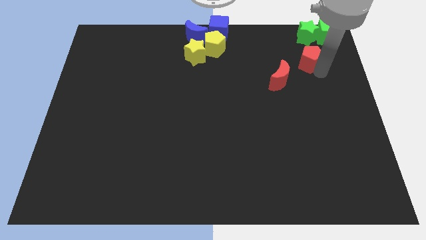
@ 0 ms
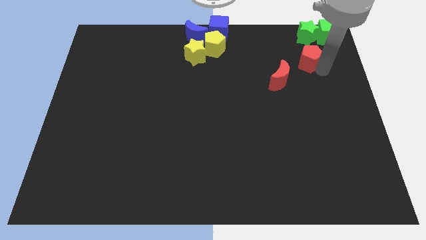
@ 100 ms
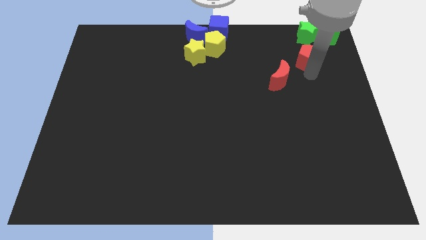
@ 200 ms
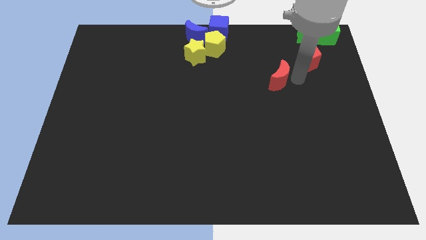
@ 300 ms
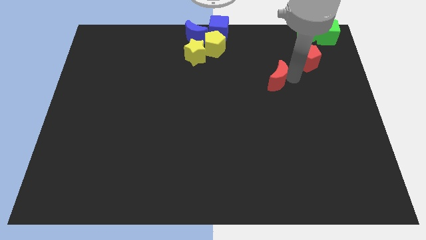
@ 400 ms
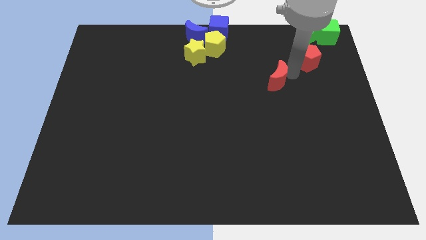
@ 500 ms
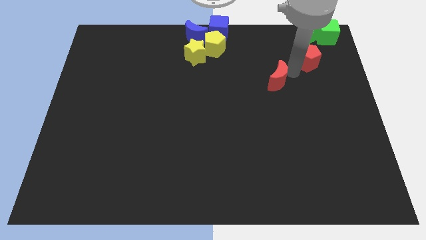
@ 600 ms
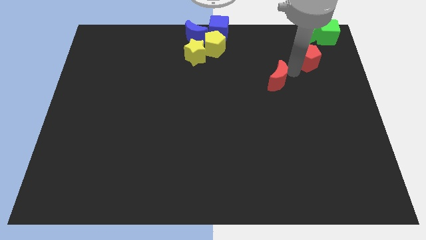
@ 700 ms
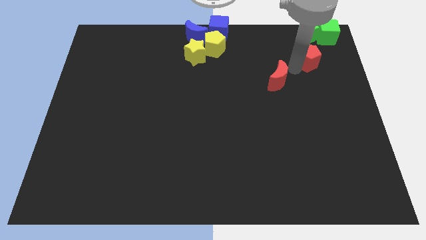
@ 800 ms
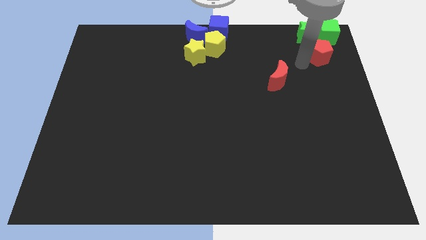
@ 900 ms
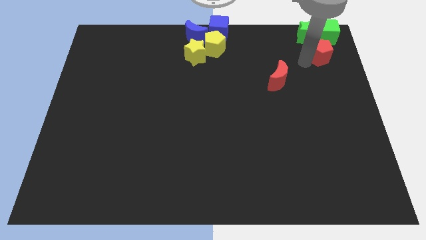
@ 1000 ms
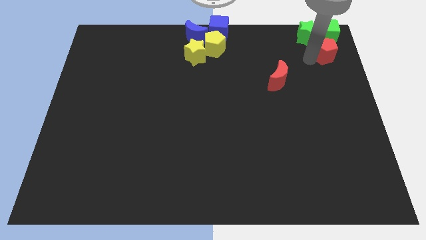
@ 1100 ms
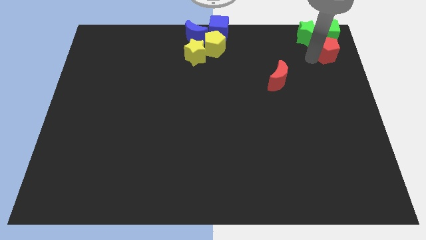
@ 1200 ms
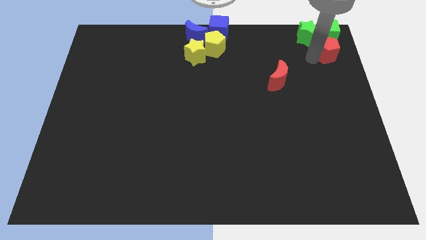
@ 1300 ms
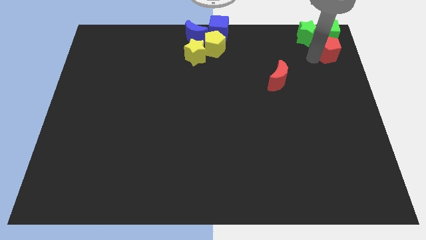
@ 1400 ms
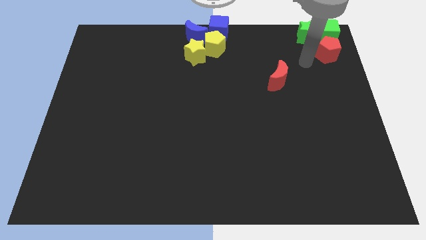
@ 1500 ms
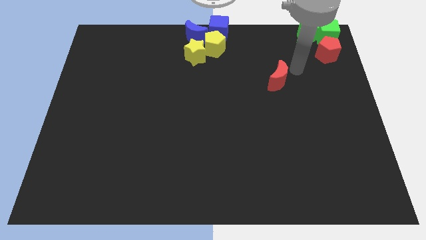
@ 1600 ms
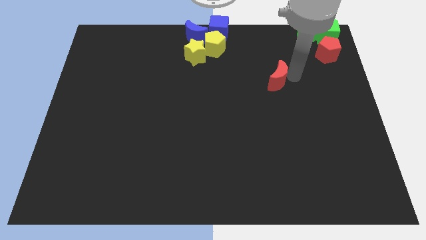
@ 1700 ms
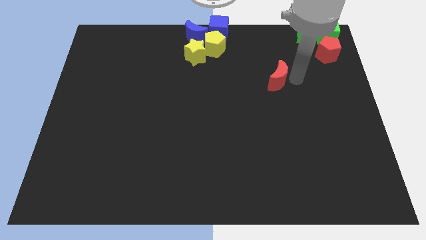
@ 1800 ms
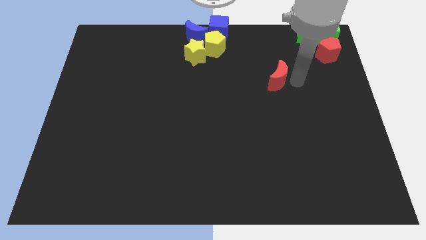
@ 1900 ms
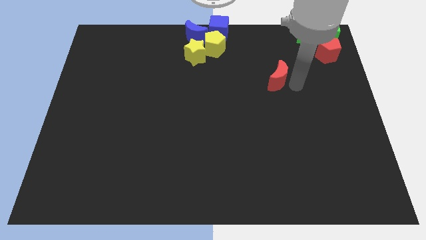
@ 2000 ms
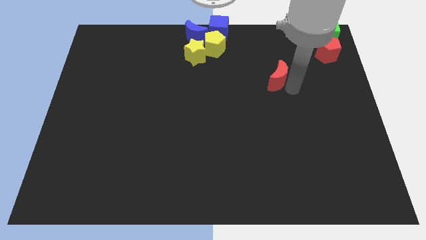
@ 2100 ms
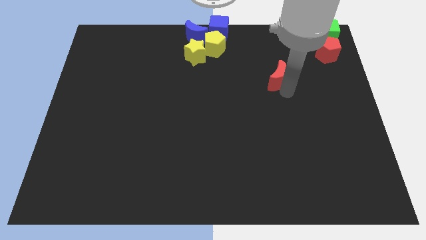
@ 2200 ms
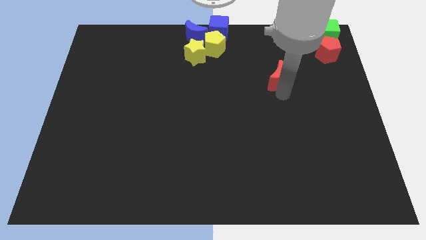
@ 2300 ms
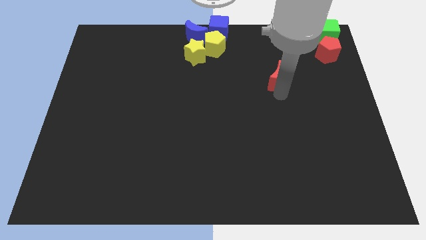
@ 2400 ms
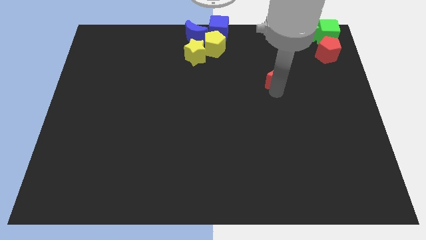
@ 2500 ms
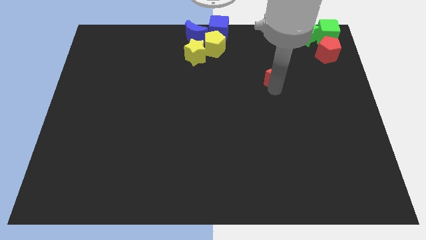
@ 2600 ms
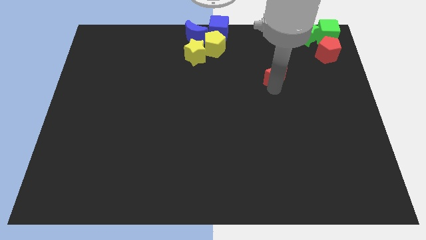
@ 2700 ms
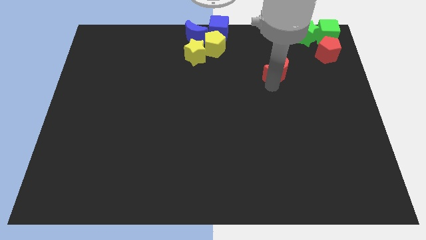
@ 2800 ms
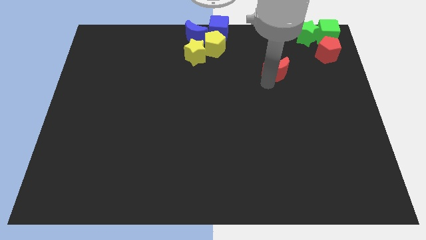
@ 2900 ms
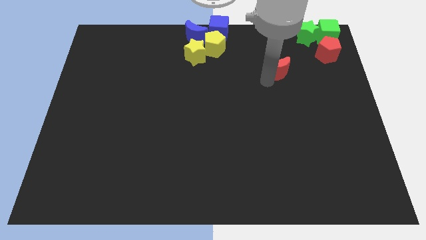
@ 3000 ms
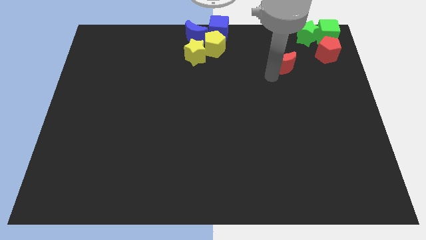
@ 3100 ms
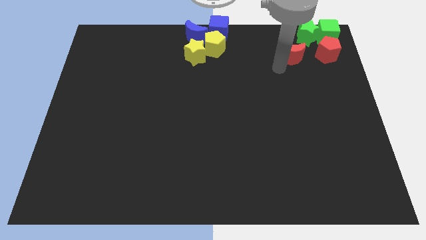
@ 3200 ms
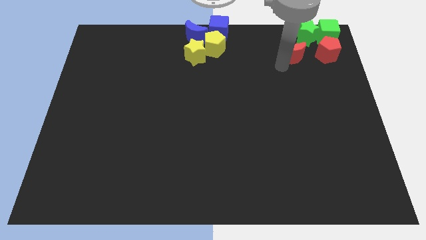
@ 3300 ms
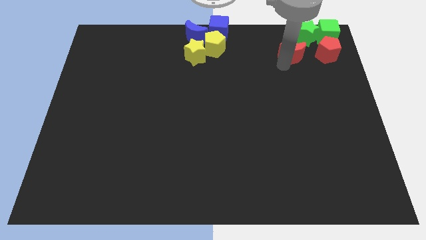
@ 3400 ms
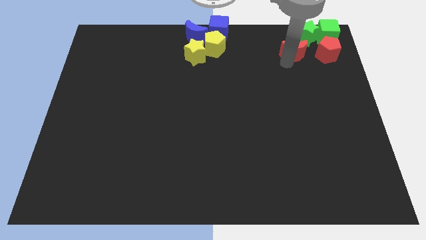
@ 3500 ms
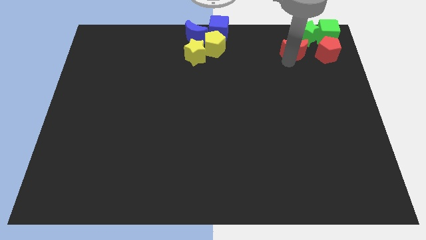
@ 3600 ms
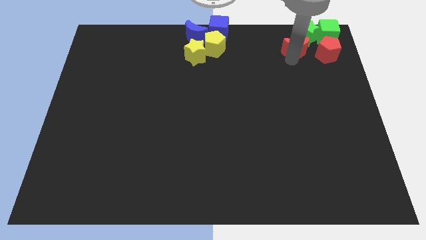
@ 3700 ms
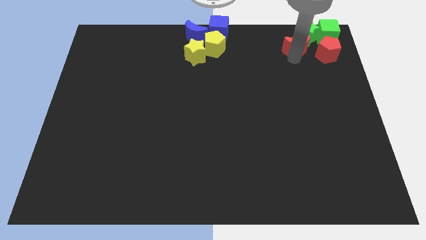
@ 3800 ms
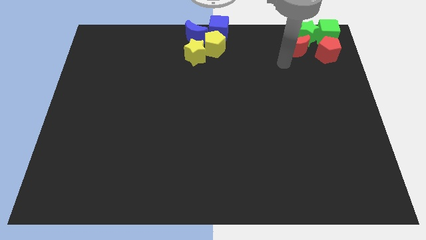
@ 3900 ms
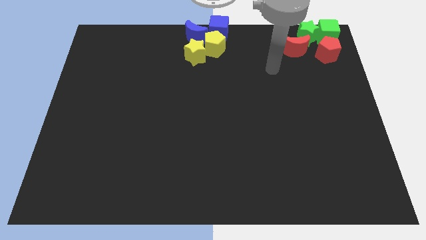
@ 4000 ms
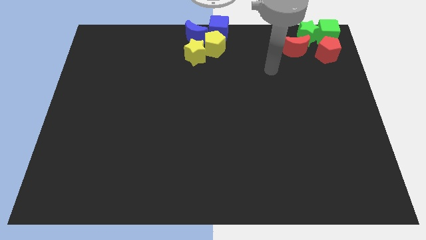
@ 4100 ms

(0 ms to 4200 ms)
push the red blocks below the green blocks

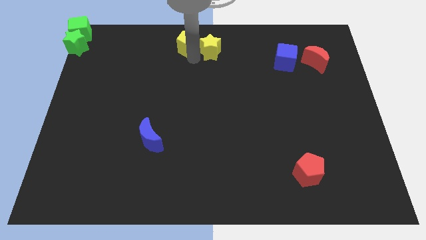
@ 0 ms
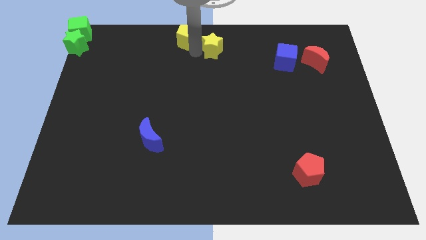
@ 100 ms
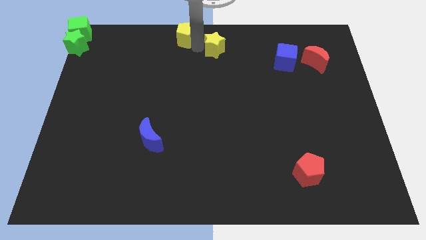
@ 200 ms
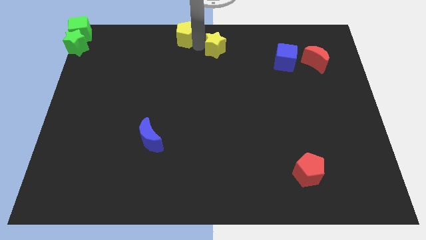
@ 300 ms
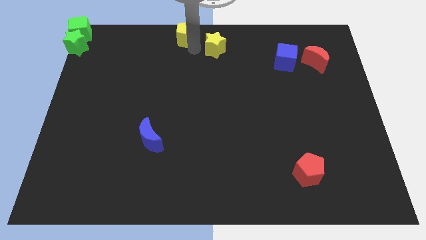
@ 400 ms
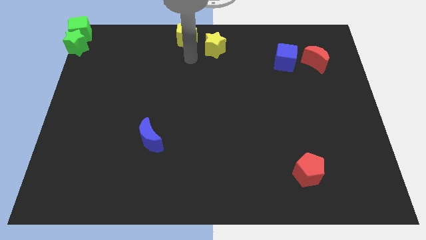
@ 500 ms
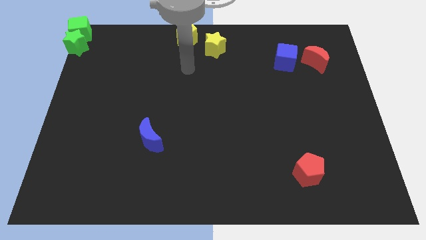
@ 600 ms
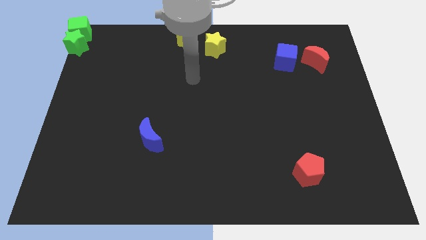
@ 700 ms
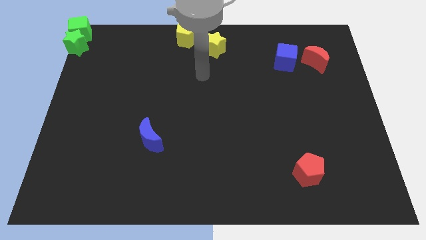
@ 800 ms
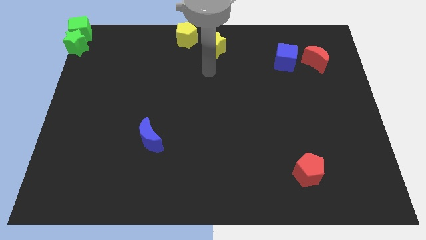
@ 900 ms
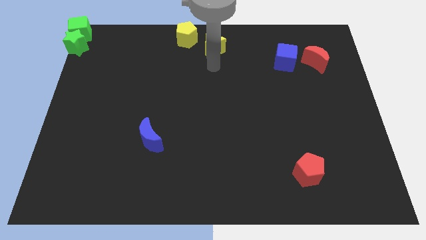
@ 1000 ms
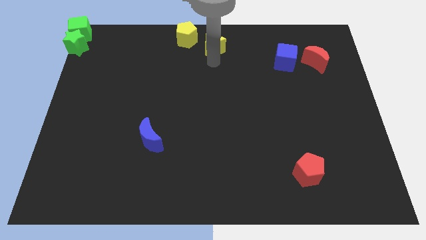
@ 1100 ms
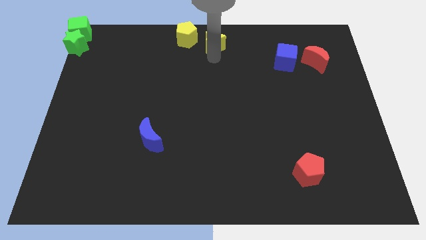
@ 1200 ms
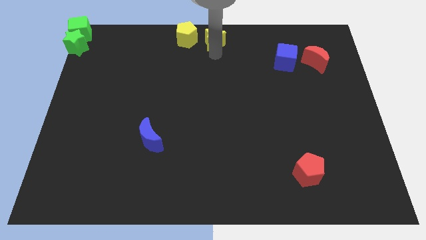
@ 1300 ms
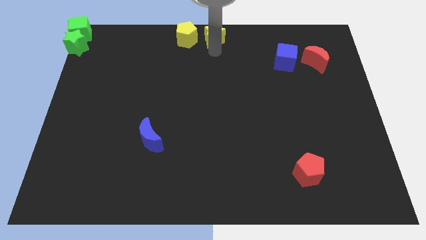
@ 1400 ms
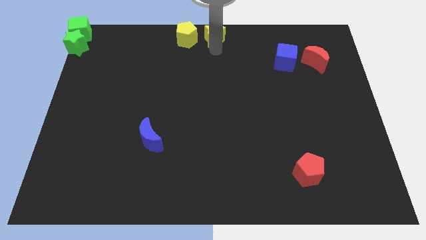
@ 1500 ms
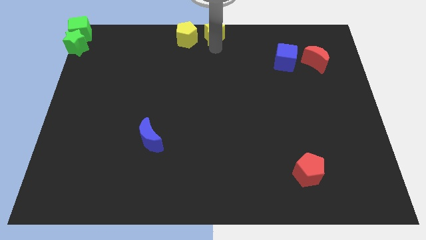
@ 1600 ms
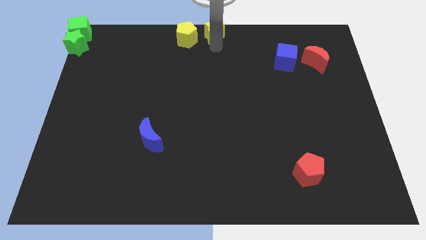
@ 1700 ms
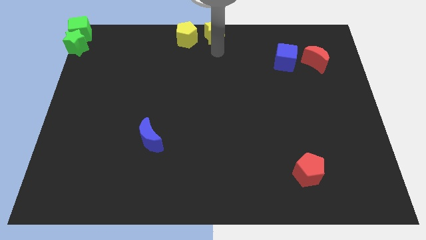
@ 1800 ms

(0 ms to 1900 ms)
place the yellow blocks at the top center

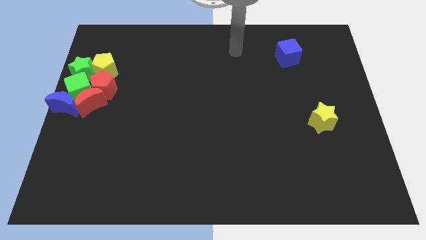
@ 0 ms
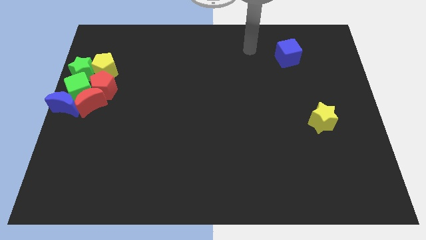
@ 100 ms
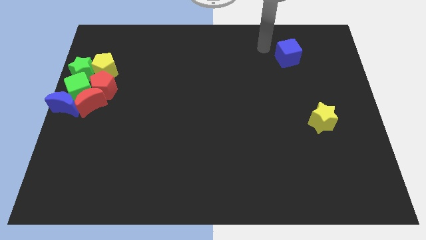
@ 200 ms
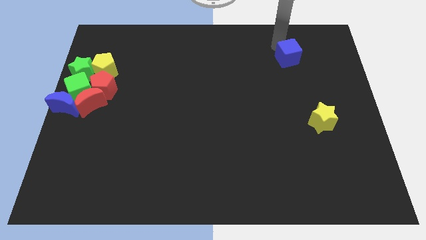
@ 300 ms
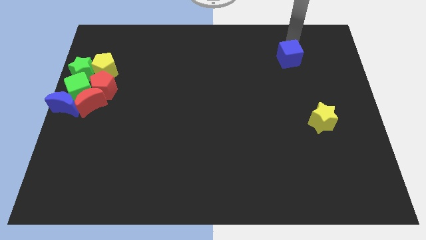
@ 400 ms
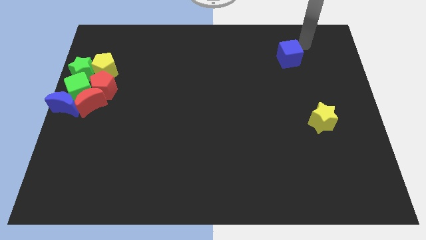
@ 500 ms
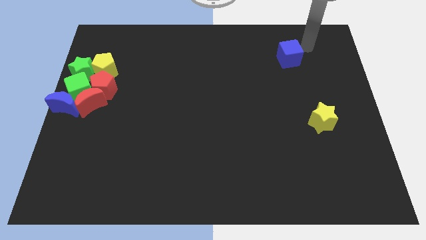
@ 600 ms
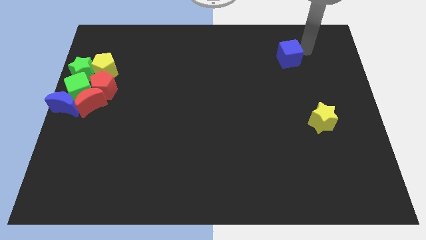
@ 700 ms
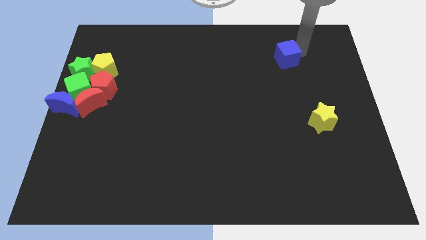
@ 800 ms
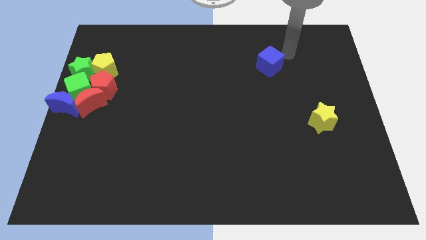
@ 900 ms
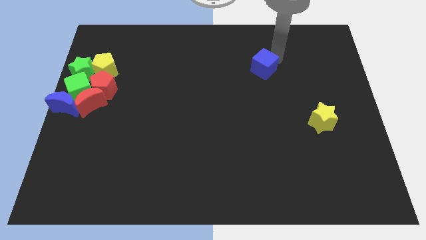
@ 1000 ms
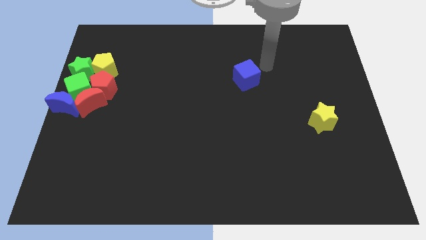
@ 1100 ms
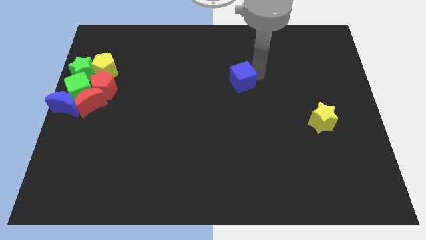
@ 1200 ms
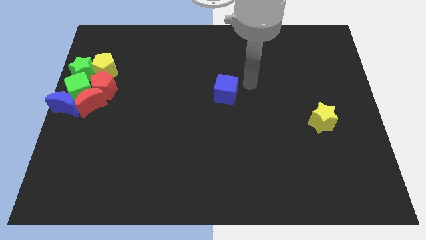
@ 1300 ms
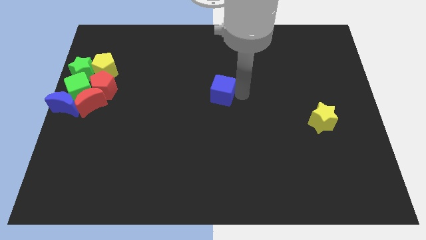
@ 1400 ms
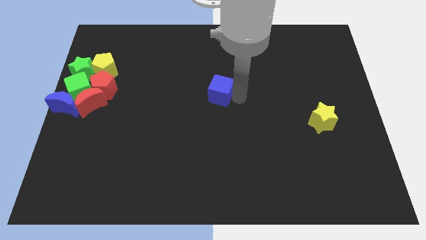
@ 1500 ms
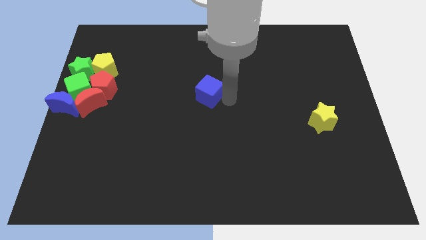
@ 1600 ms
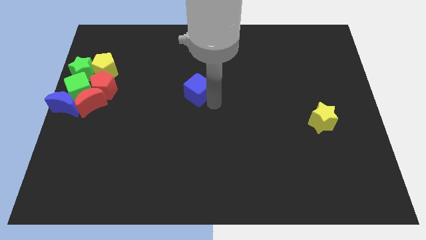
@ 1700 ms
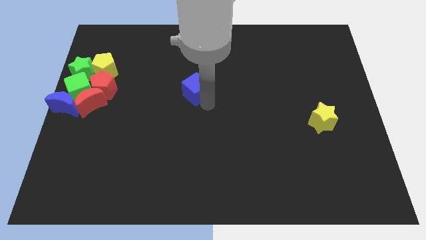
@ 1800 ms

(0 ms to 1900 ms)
move the blue cube to the right of red pentagon

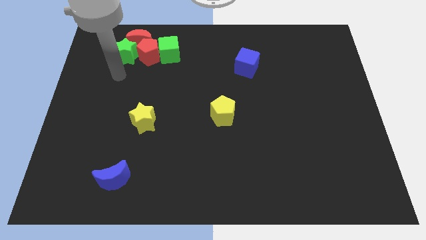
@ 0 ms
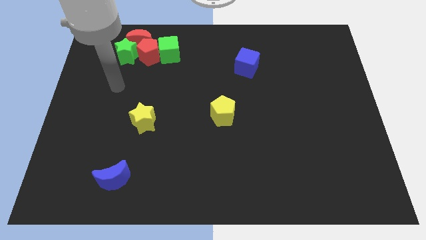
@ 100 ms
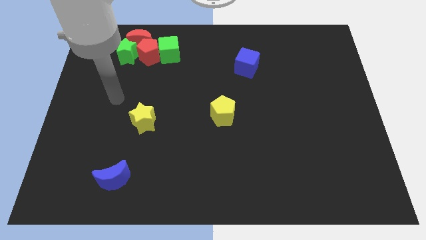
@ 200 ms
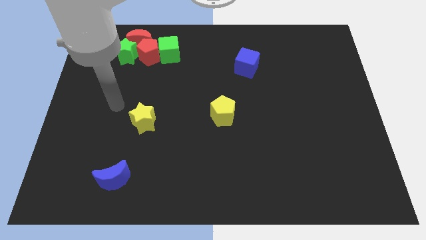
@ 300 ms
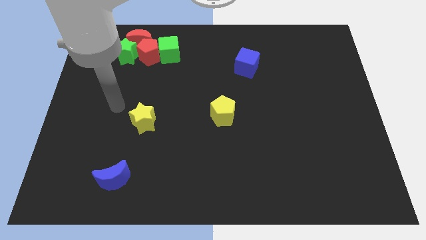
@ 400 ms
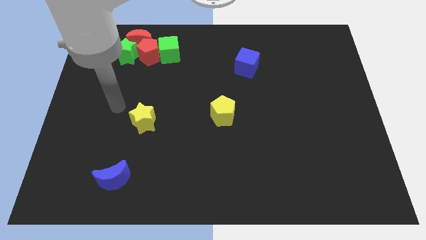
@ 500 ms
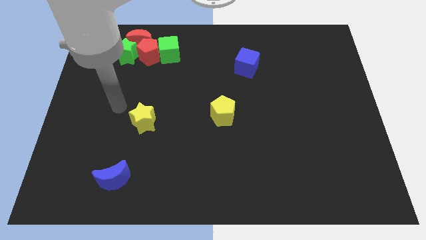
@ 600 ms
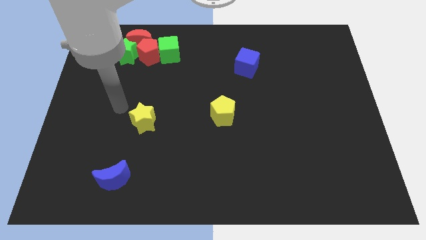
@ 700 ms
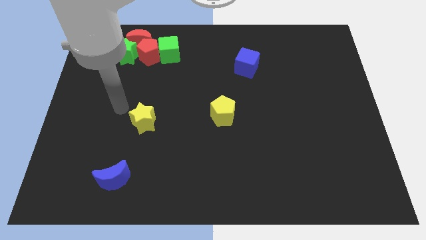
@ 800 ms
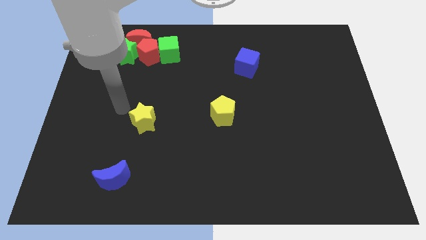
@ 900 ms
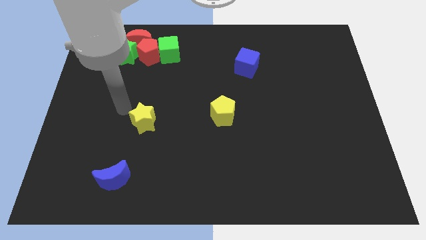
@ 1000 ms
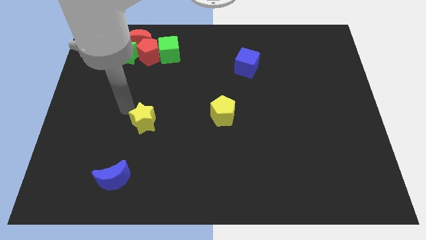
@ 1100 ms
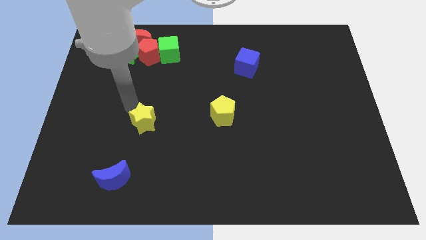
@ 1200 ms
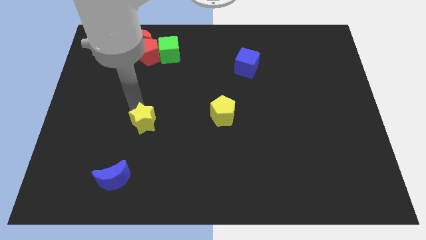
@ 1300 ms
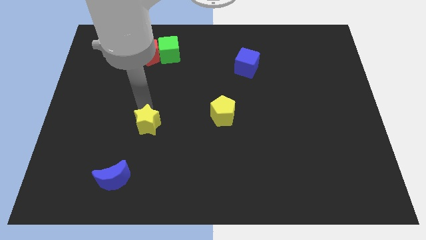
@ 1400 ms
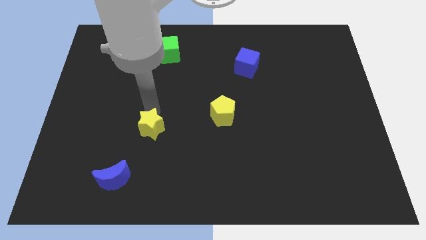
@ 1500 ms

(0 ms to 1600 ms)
place the arm above the yellow star
